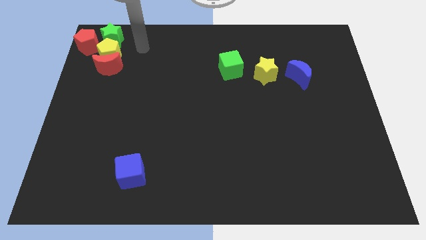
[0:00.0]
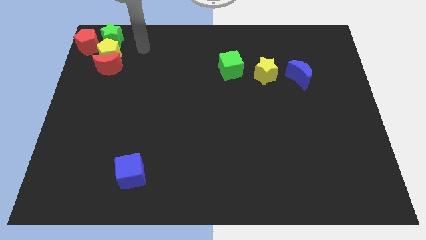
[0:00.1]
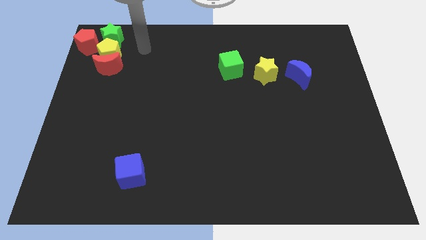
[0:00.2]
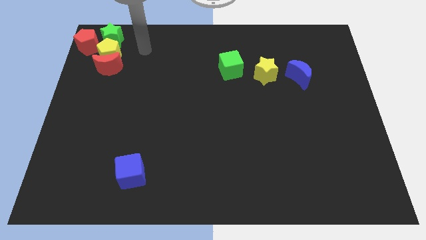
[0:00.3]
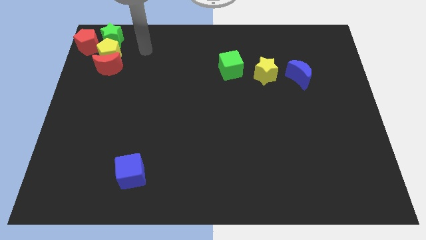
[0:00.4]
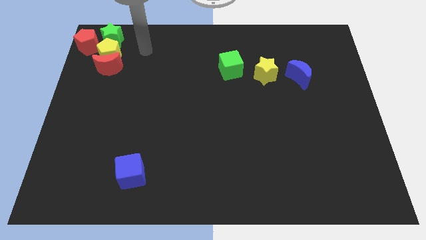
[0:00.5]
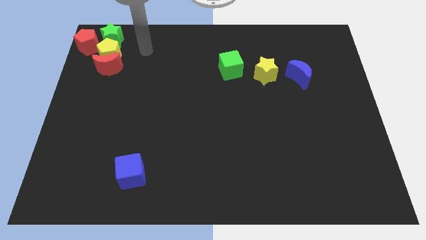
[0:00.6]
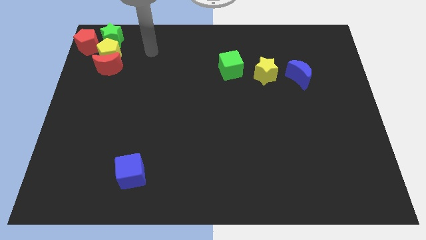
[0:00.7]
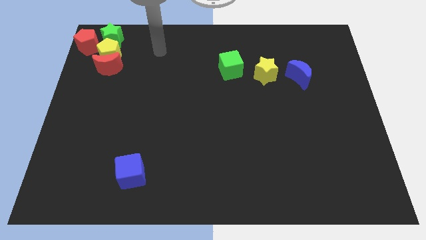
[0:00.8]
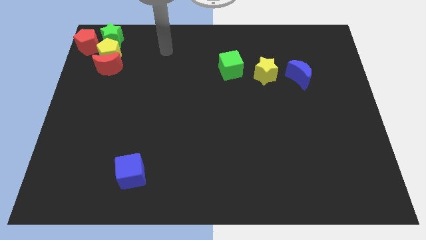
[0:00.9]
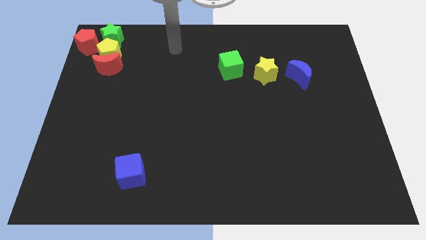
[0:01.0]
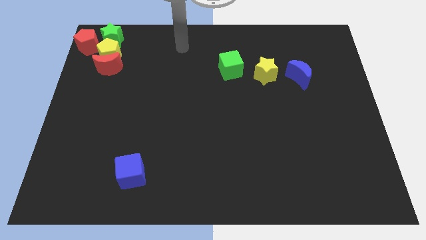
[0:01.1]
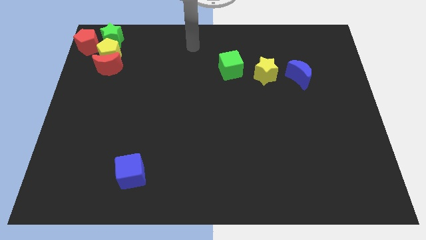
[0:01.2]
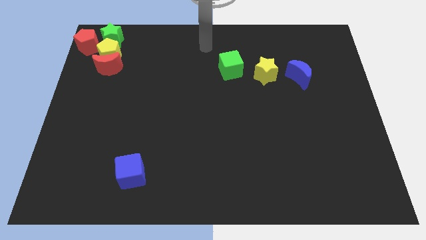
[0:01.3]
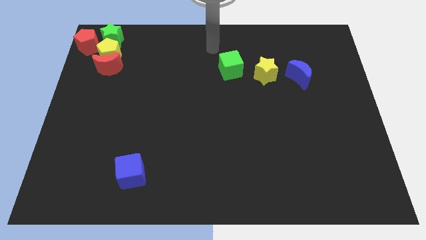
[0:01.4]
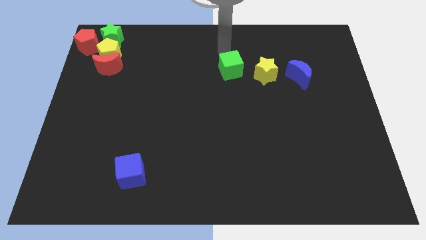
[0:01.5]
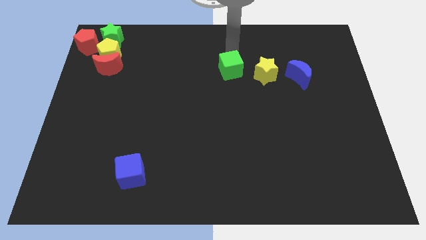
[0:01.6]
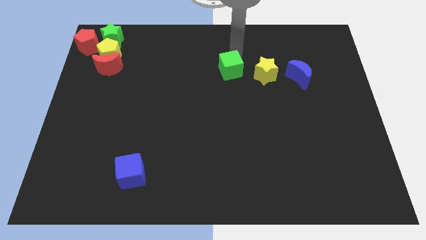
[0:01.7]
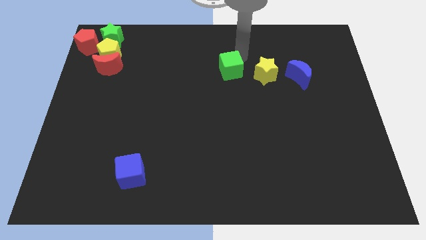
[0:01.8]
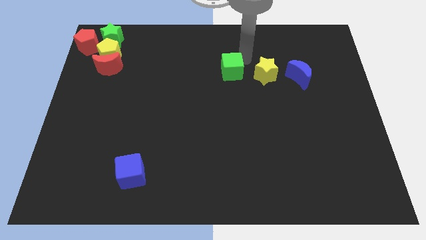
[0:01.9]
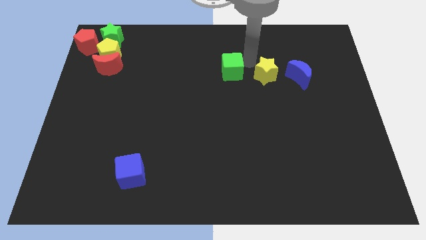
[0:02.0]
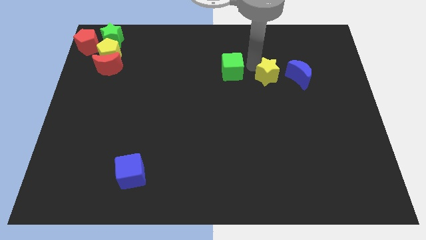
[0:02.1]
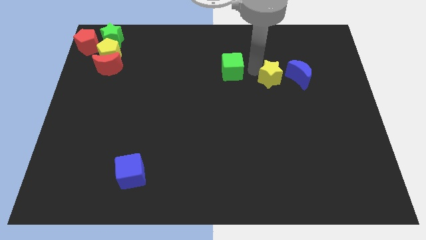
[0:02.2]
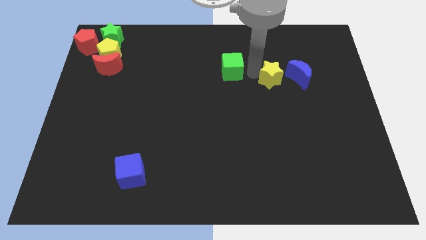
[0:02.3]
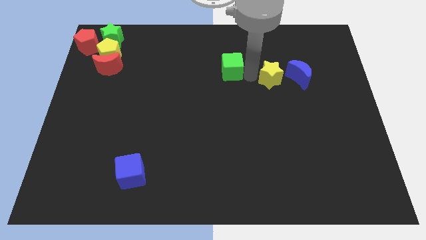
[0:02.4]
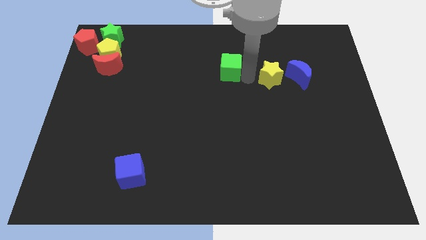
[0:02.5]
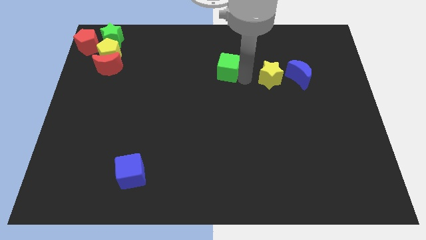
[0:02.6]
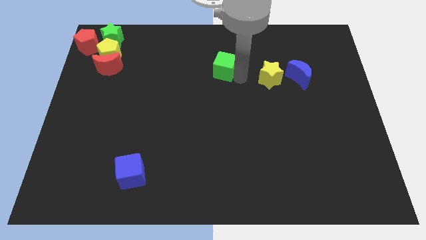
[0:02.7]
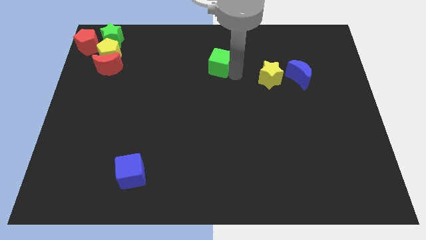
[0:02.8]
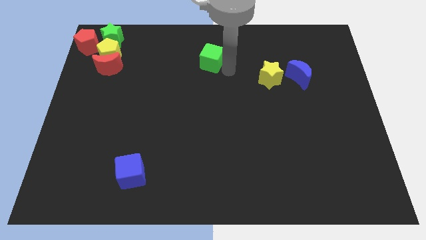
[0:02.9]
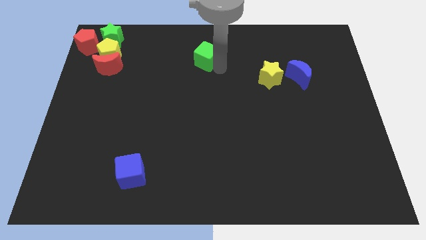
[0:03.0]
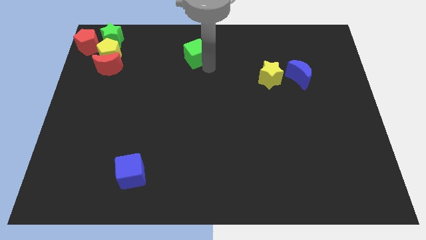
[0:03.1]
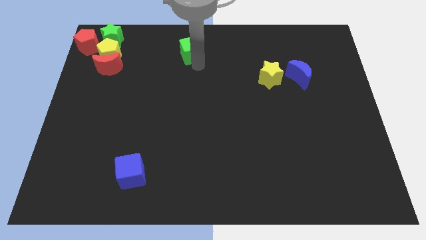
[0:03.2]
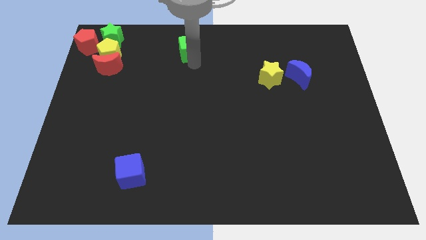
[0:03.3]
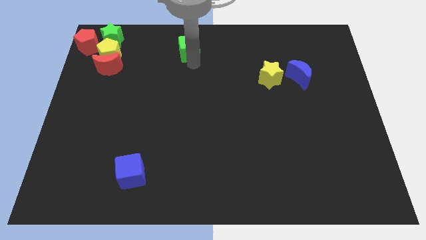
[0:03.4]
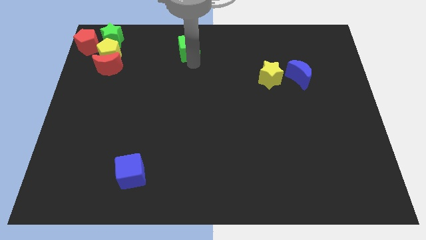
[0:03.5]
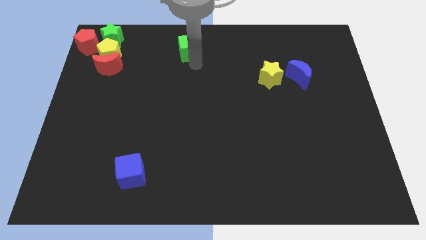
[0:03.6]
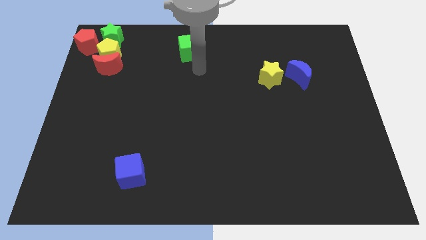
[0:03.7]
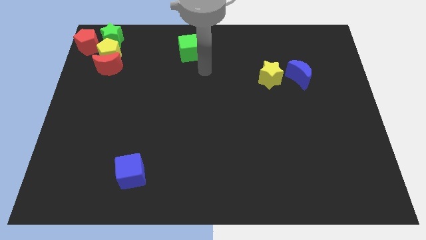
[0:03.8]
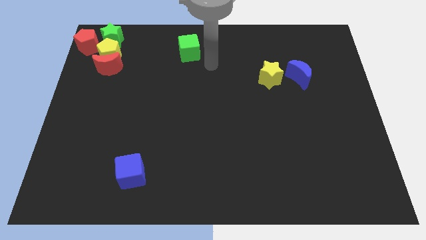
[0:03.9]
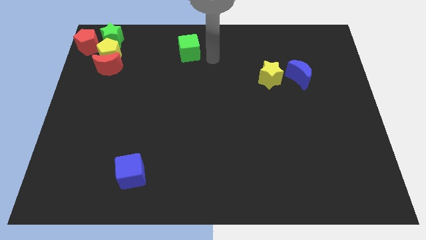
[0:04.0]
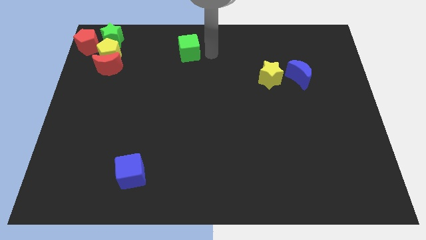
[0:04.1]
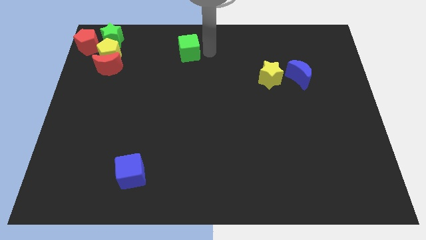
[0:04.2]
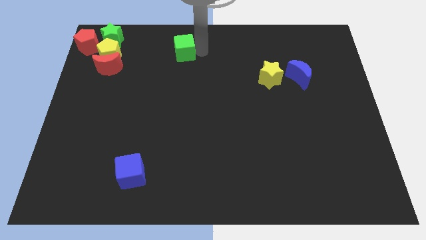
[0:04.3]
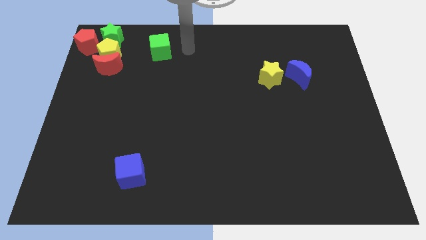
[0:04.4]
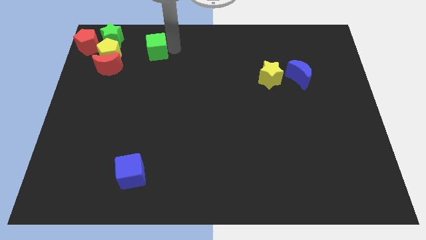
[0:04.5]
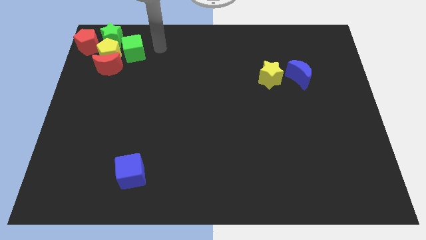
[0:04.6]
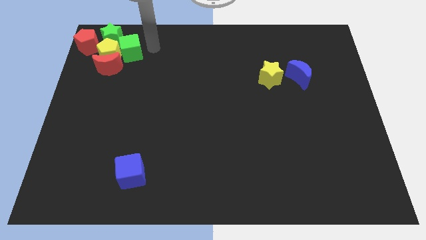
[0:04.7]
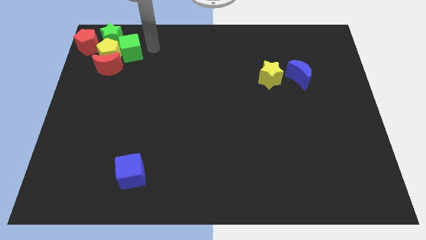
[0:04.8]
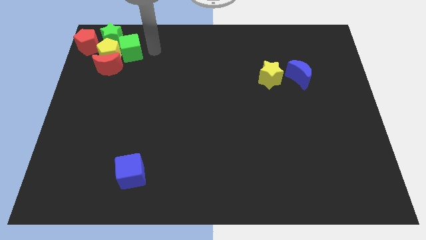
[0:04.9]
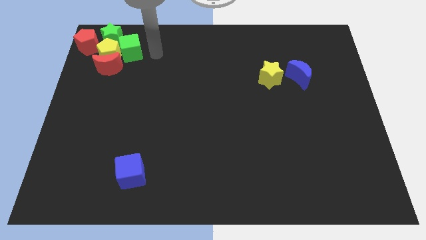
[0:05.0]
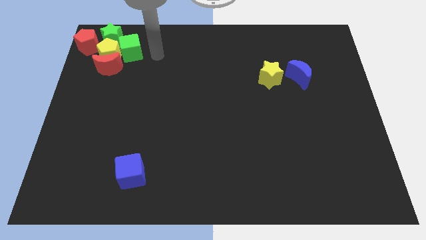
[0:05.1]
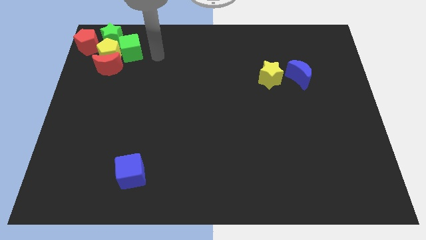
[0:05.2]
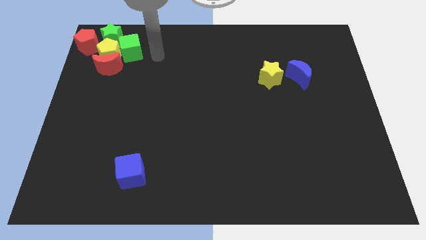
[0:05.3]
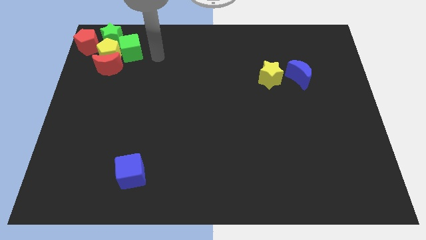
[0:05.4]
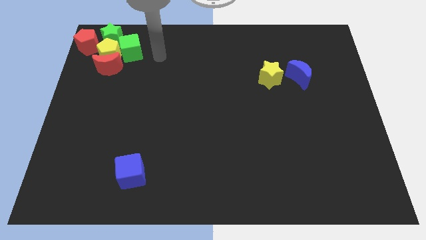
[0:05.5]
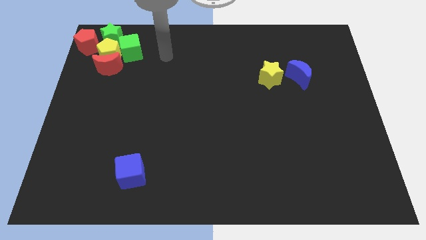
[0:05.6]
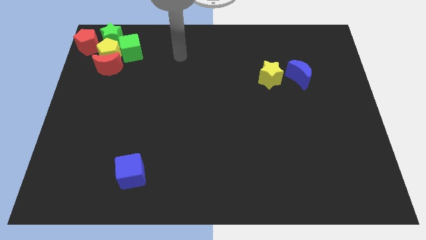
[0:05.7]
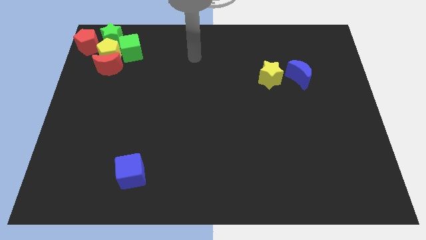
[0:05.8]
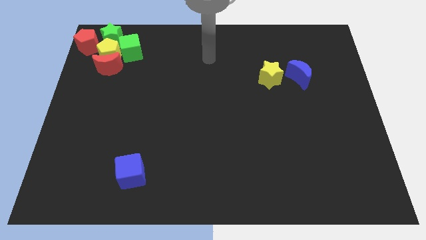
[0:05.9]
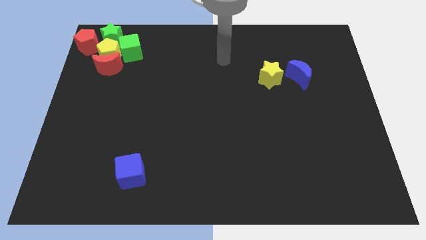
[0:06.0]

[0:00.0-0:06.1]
move the green cube to the right side of the yellow pentagon

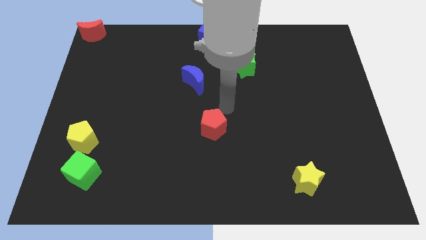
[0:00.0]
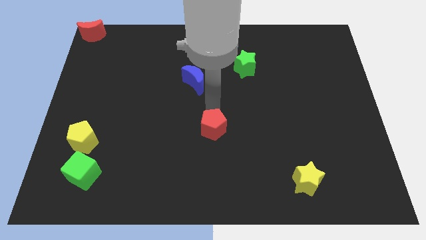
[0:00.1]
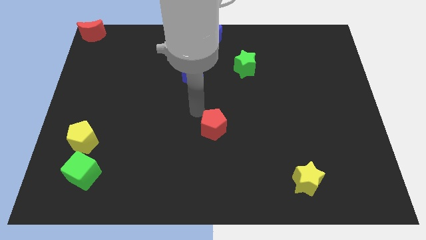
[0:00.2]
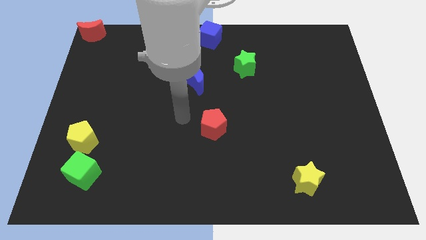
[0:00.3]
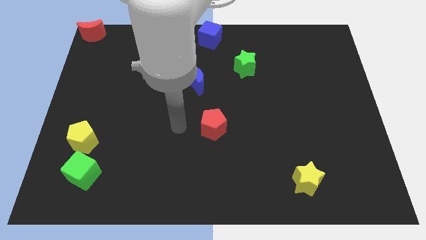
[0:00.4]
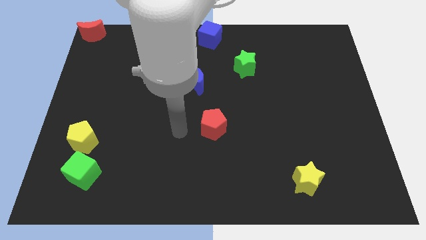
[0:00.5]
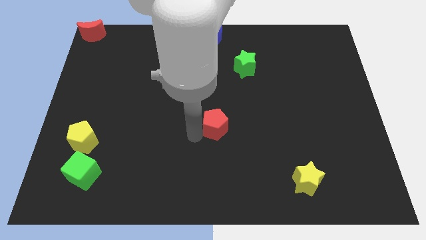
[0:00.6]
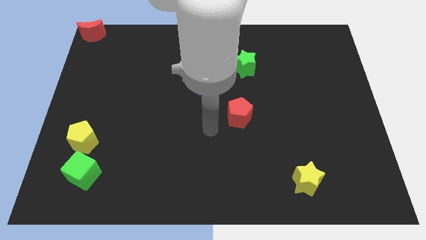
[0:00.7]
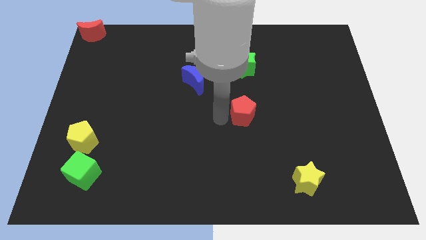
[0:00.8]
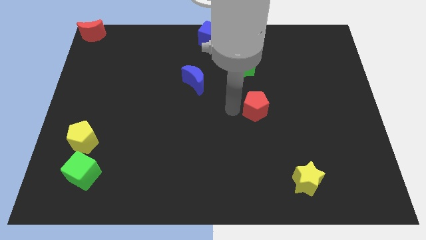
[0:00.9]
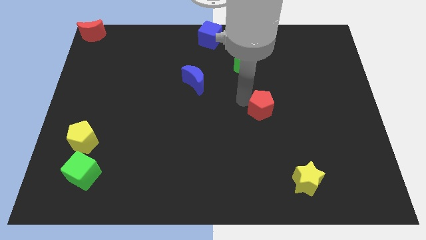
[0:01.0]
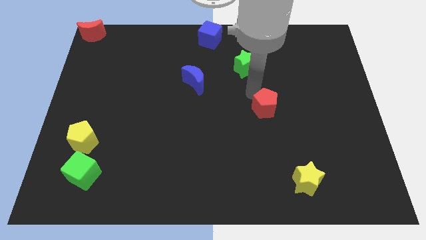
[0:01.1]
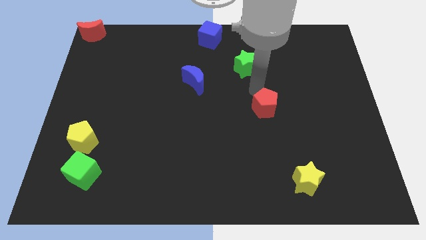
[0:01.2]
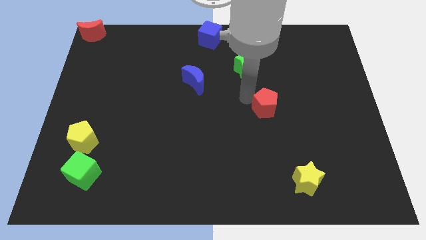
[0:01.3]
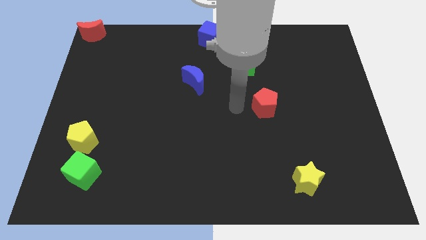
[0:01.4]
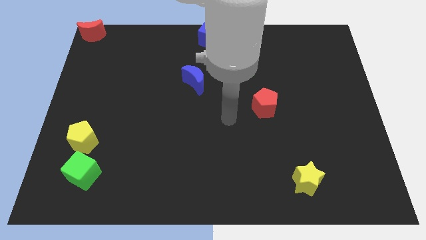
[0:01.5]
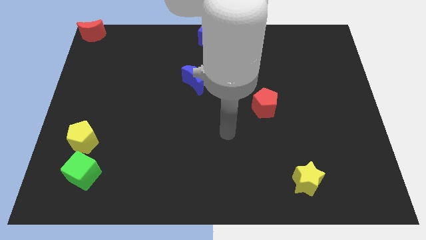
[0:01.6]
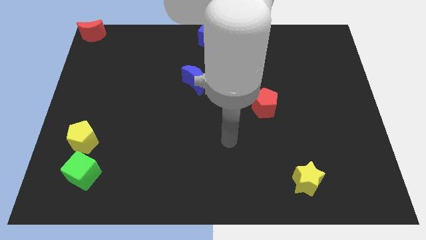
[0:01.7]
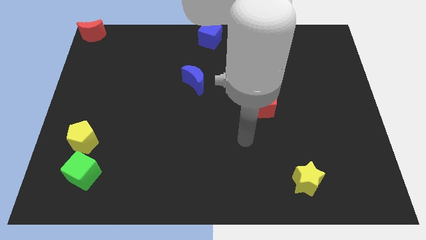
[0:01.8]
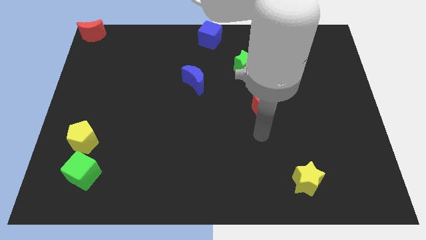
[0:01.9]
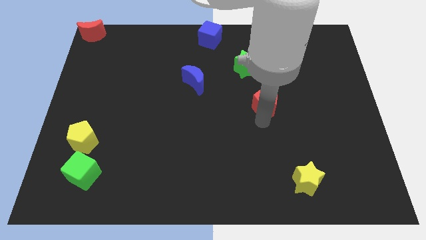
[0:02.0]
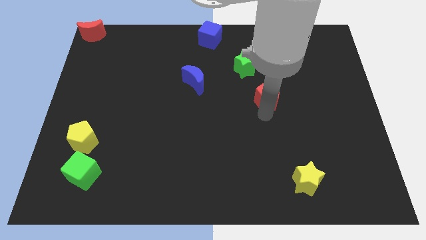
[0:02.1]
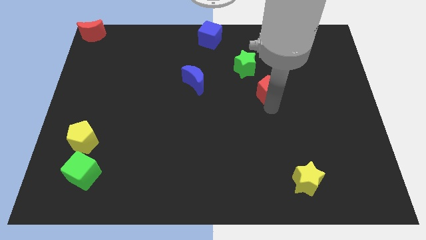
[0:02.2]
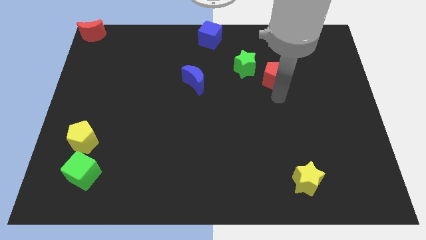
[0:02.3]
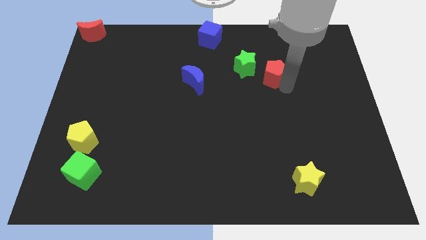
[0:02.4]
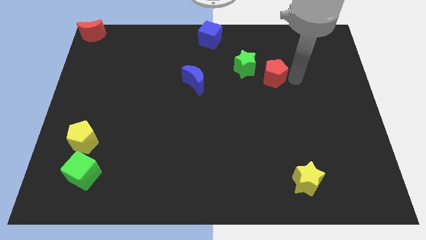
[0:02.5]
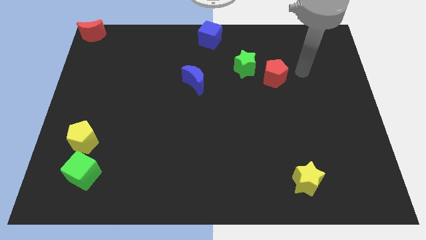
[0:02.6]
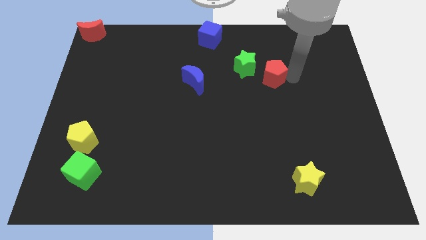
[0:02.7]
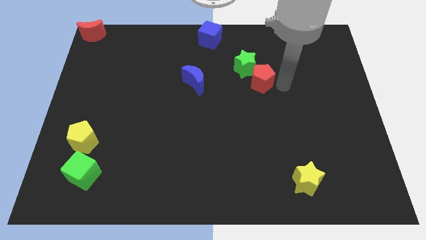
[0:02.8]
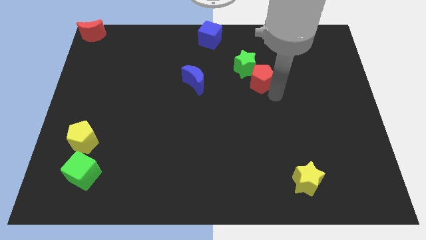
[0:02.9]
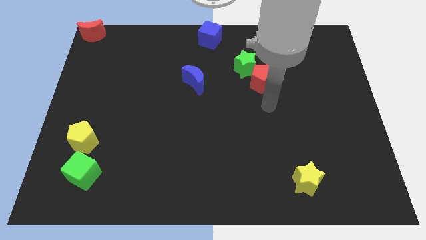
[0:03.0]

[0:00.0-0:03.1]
push red pentagon towards green star
